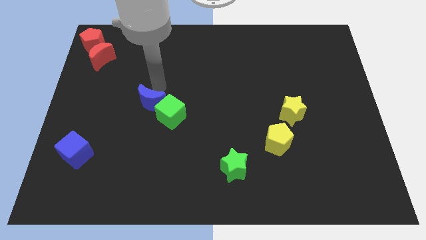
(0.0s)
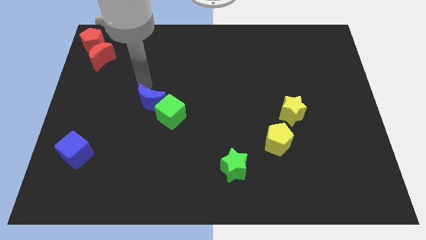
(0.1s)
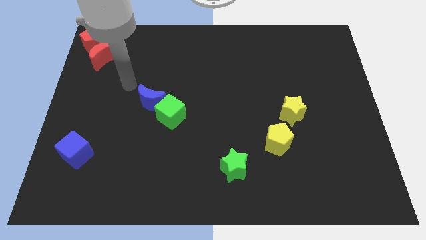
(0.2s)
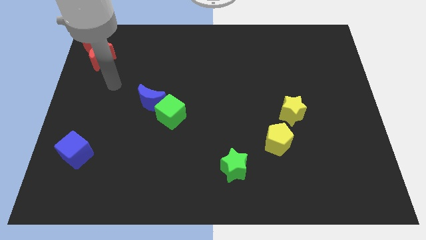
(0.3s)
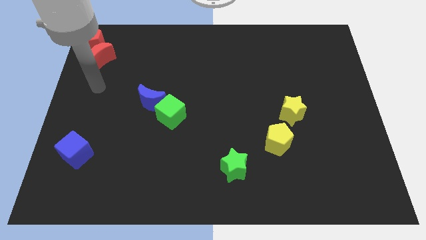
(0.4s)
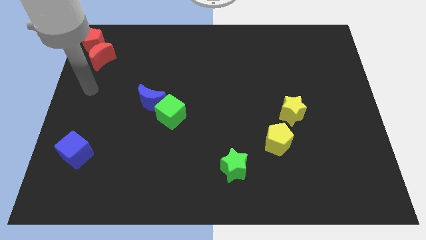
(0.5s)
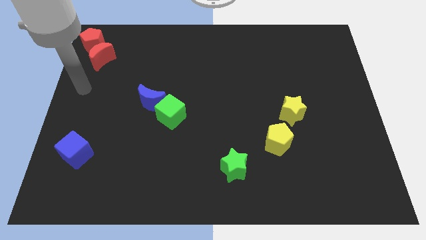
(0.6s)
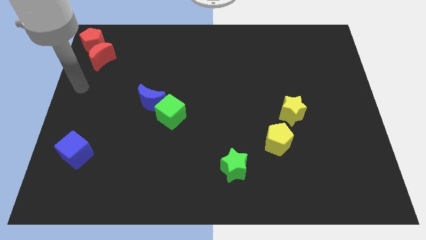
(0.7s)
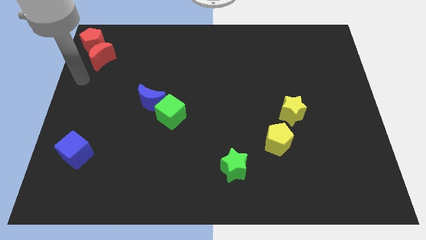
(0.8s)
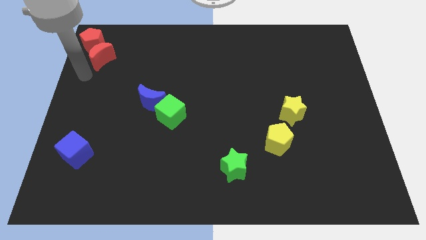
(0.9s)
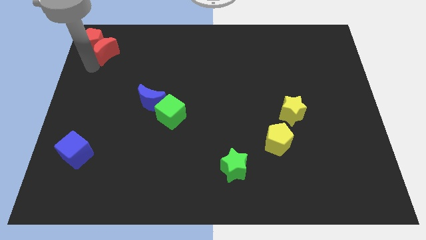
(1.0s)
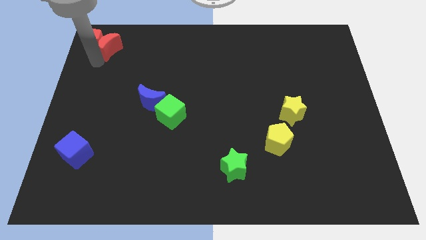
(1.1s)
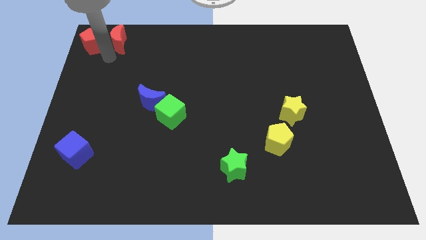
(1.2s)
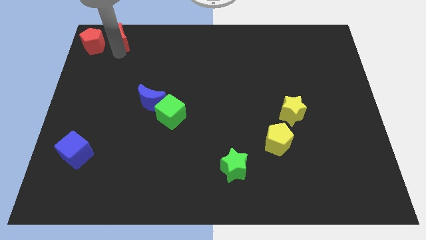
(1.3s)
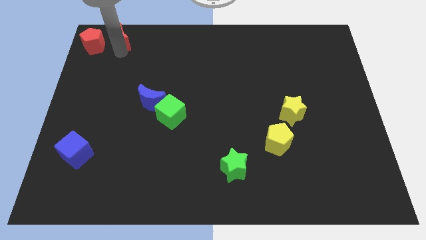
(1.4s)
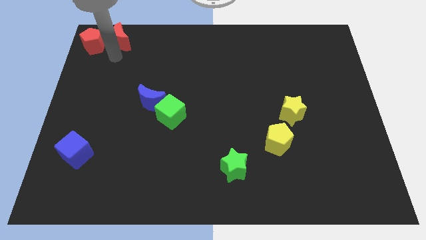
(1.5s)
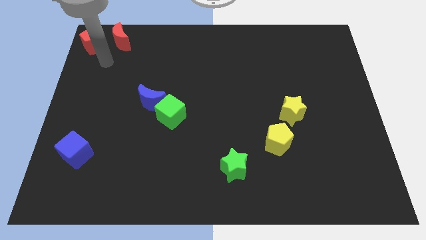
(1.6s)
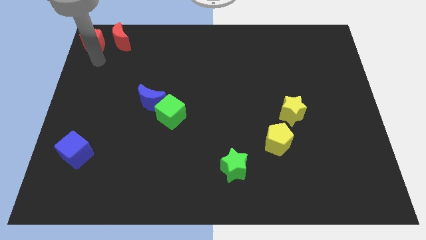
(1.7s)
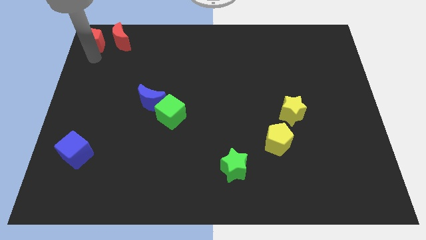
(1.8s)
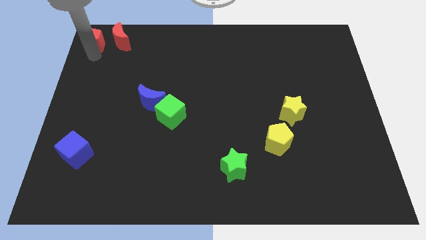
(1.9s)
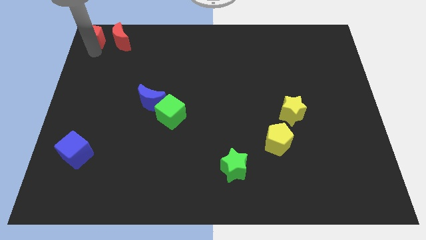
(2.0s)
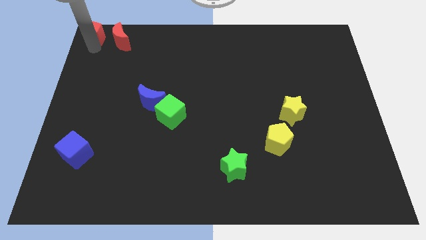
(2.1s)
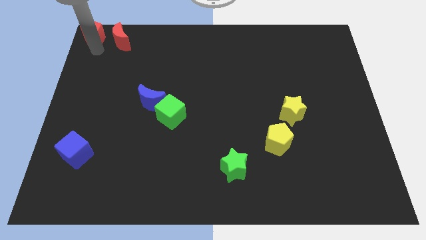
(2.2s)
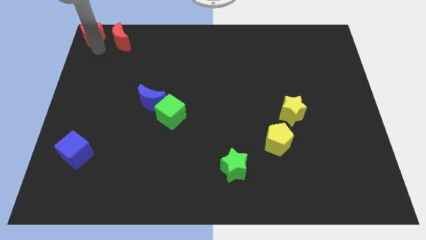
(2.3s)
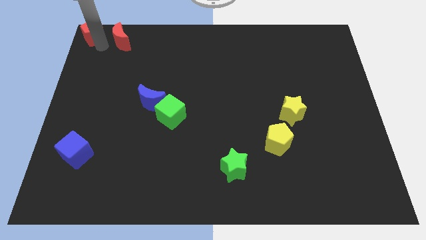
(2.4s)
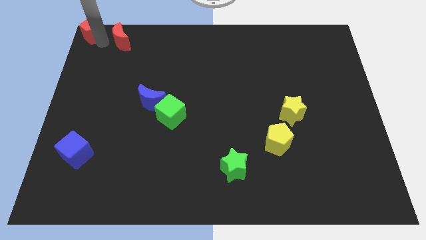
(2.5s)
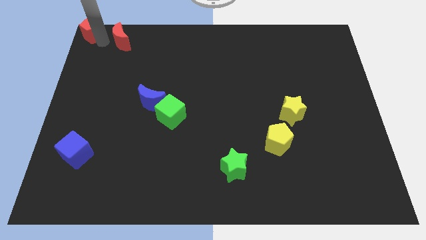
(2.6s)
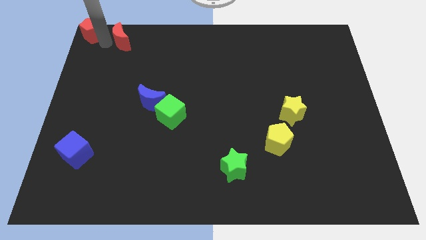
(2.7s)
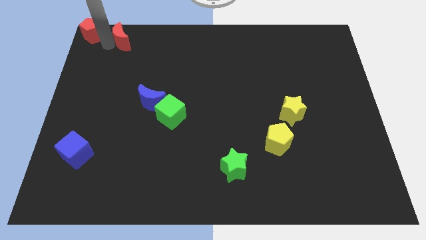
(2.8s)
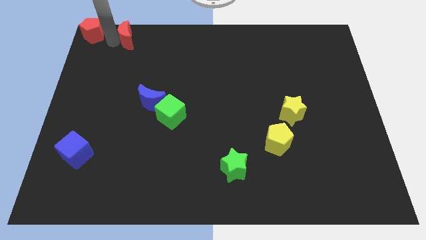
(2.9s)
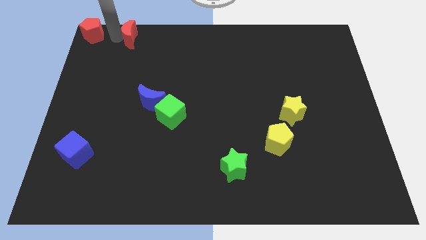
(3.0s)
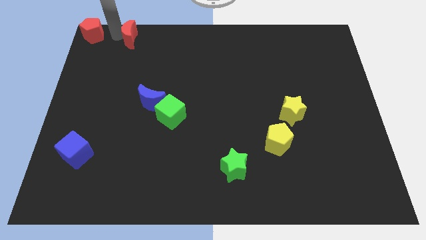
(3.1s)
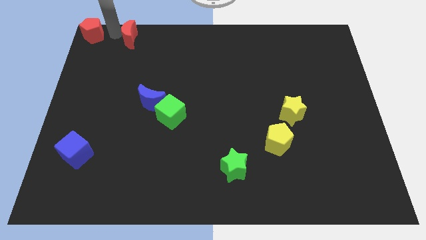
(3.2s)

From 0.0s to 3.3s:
move the red crescent to the right of the red pentagon

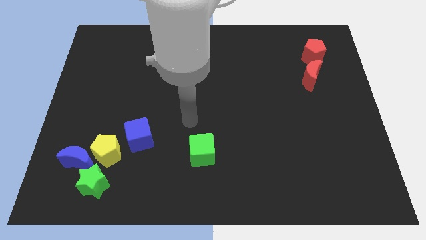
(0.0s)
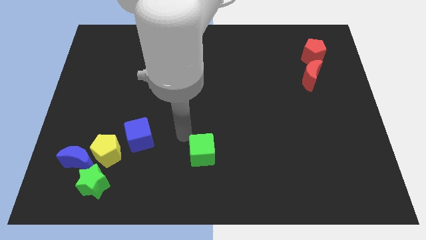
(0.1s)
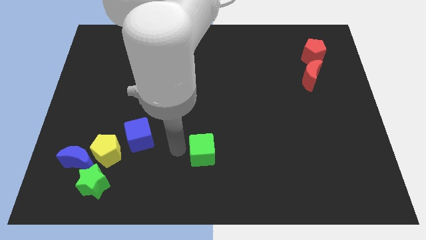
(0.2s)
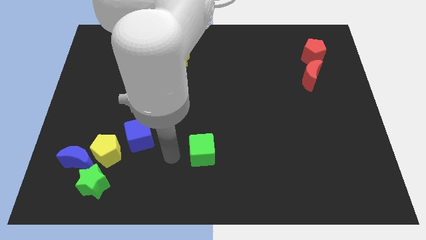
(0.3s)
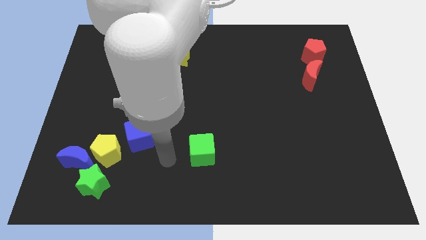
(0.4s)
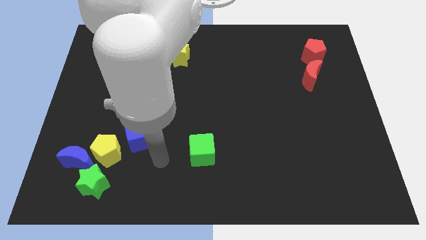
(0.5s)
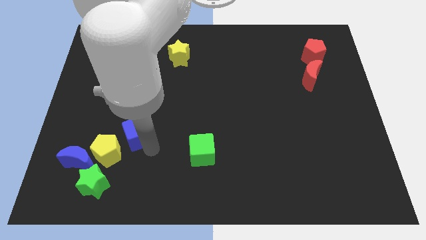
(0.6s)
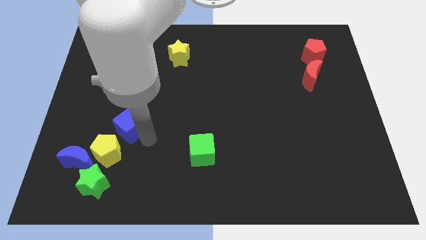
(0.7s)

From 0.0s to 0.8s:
touch the bottom of blue cube

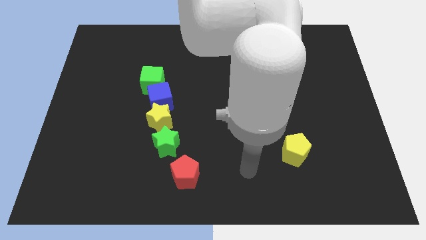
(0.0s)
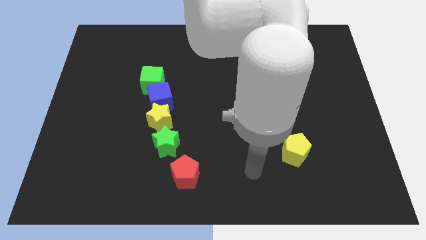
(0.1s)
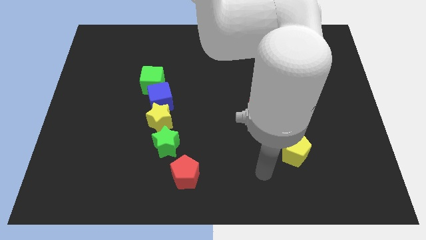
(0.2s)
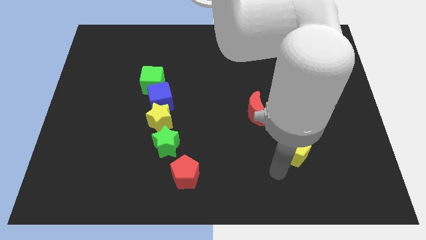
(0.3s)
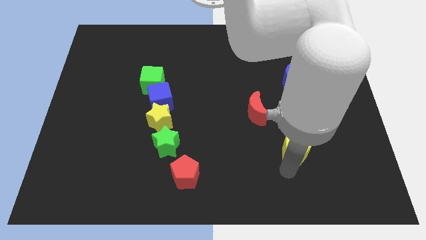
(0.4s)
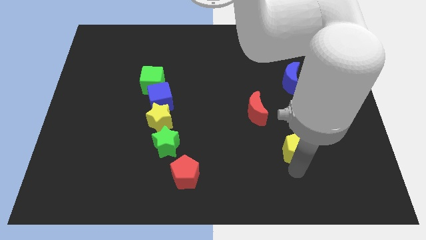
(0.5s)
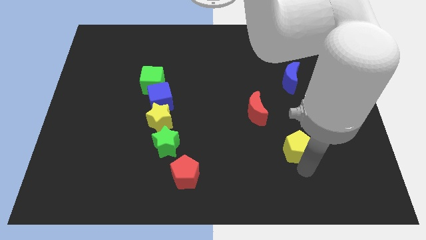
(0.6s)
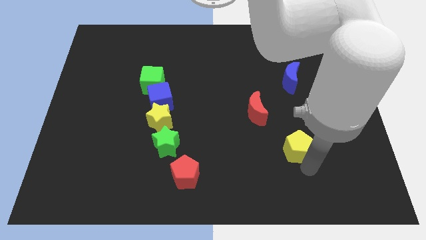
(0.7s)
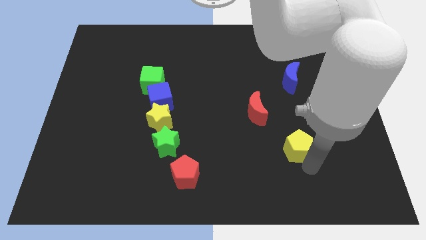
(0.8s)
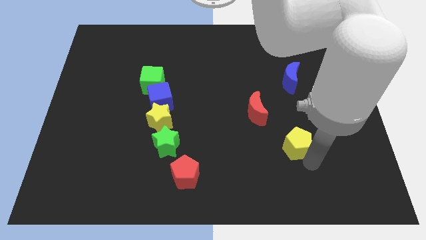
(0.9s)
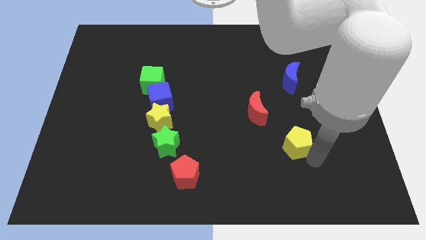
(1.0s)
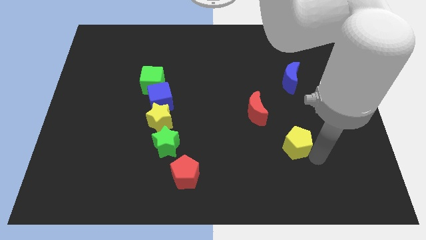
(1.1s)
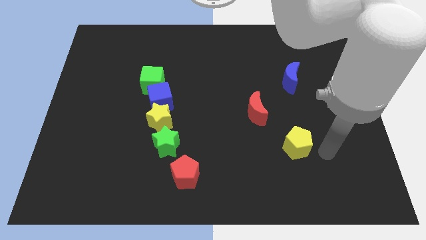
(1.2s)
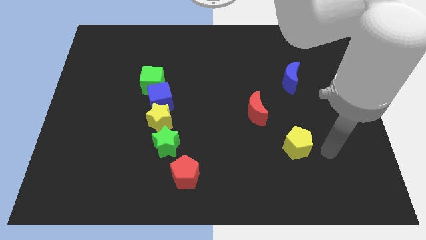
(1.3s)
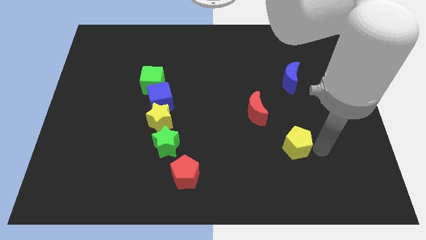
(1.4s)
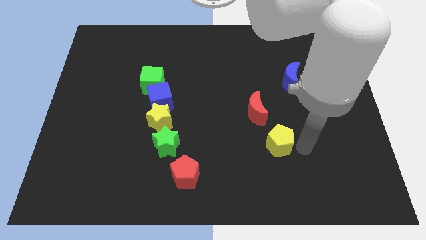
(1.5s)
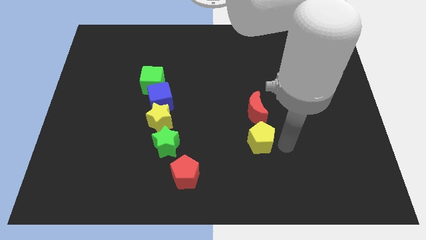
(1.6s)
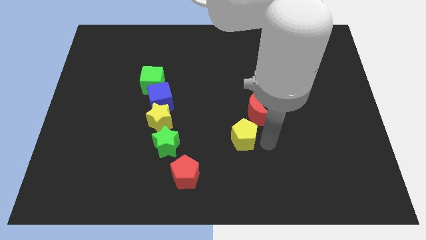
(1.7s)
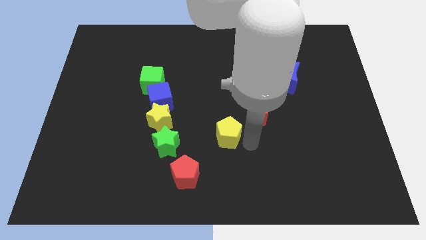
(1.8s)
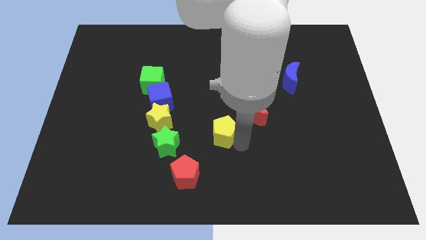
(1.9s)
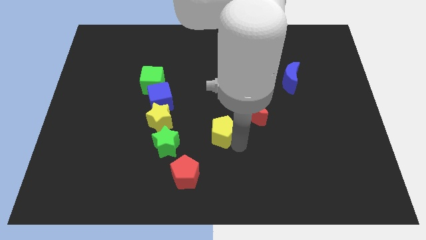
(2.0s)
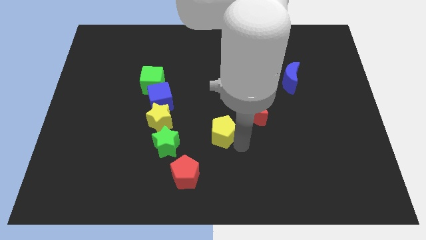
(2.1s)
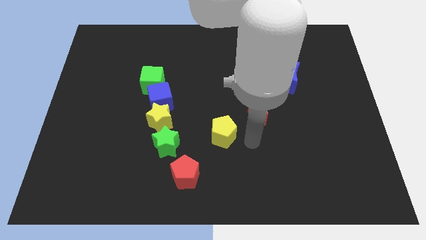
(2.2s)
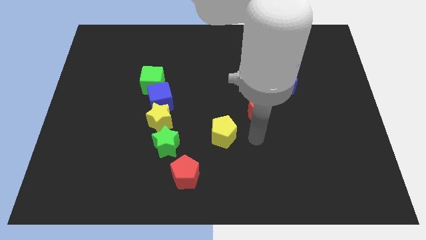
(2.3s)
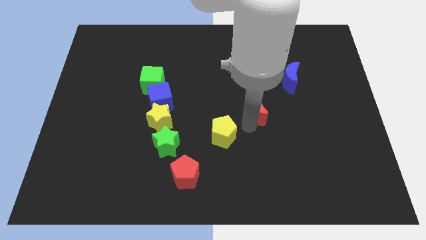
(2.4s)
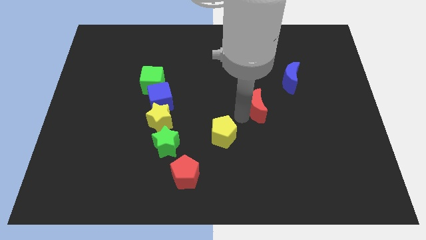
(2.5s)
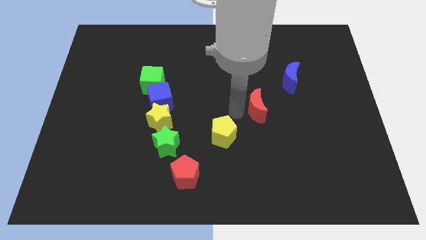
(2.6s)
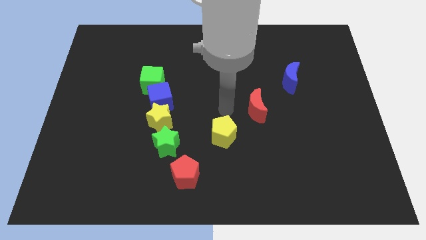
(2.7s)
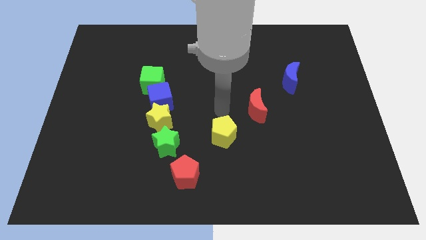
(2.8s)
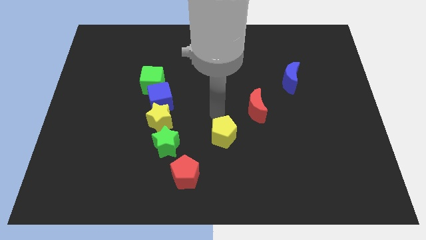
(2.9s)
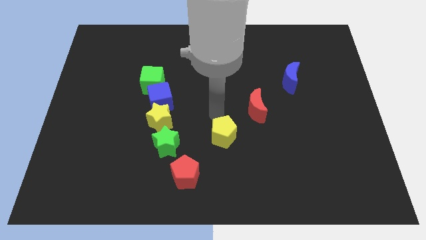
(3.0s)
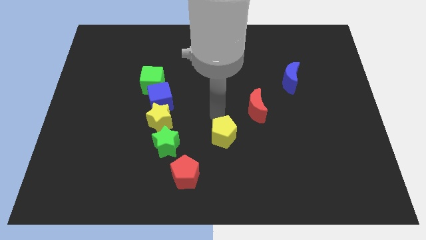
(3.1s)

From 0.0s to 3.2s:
place yellow pentagon to the right of green star

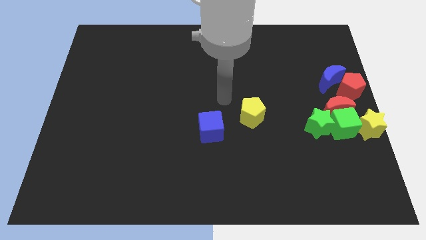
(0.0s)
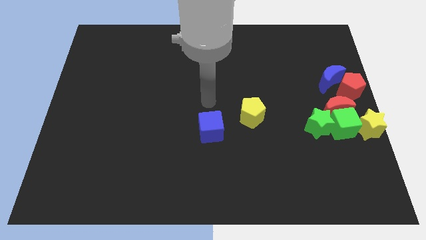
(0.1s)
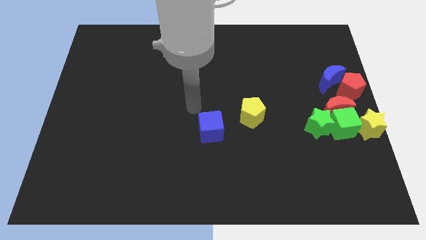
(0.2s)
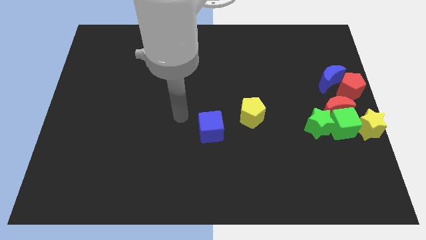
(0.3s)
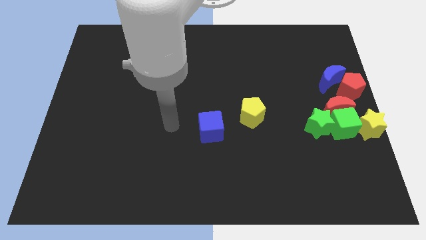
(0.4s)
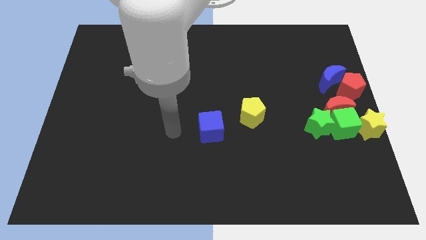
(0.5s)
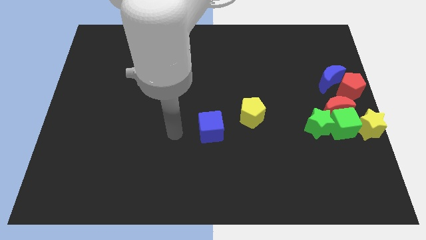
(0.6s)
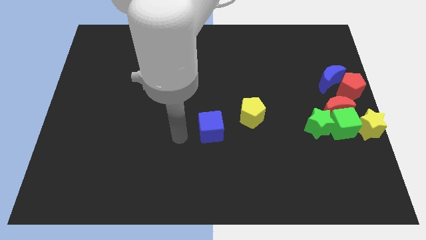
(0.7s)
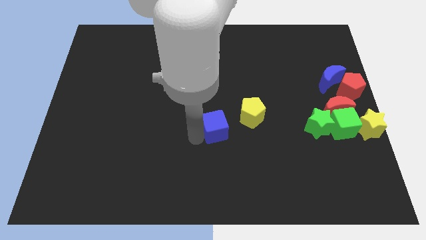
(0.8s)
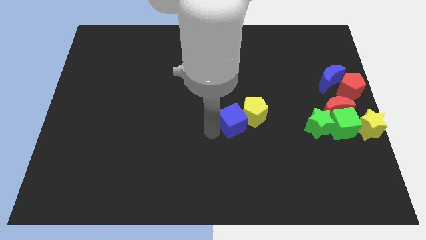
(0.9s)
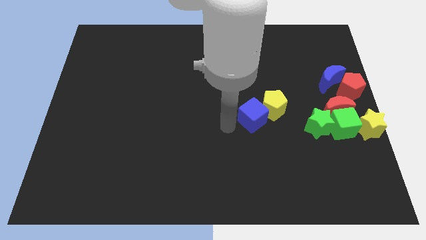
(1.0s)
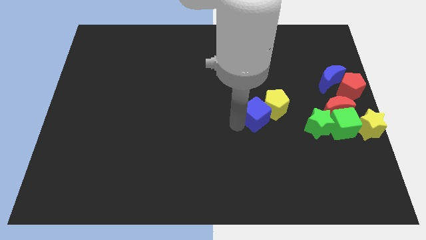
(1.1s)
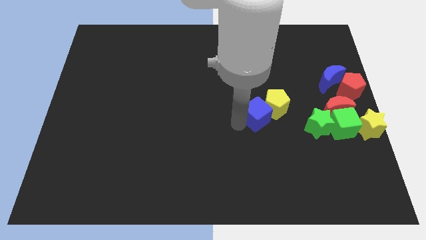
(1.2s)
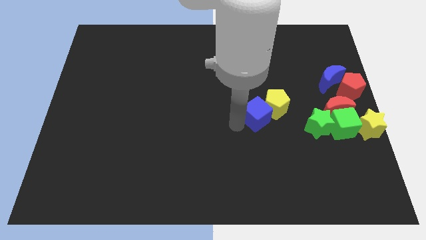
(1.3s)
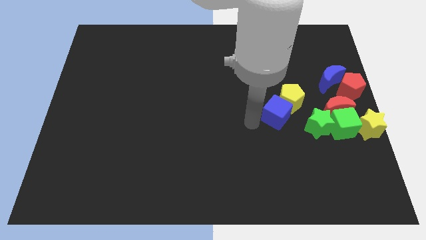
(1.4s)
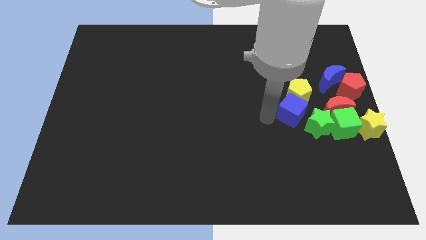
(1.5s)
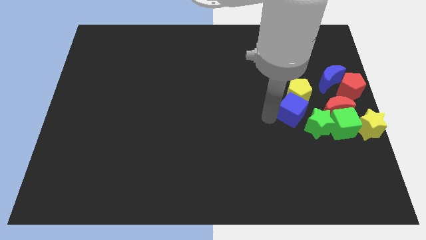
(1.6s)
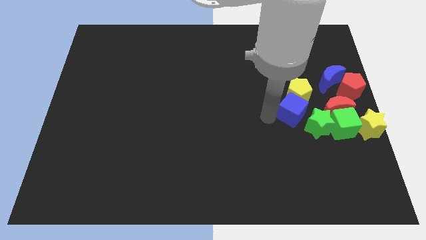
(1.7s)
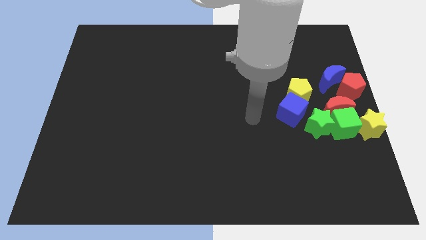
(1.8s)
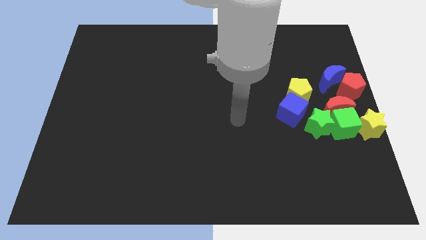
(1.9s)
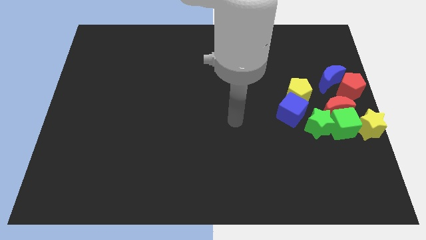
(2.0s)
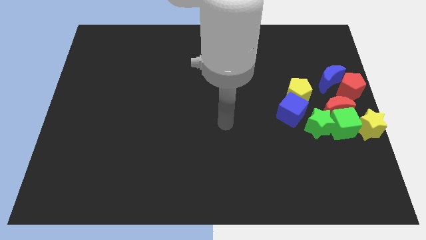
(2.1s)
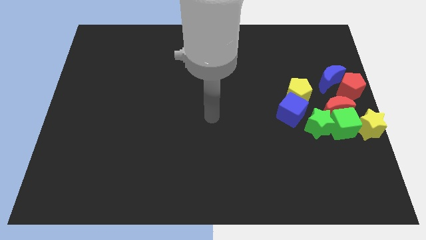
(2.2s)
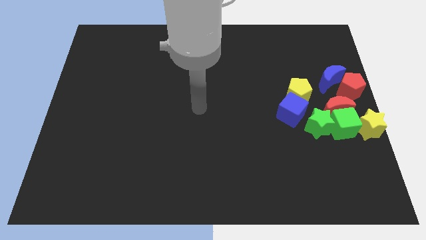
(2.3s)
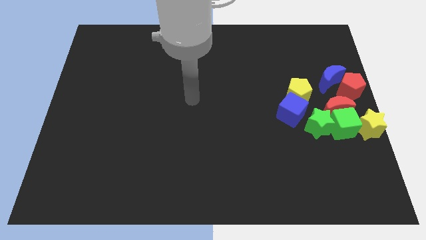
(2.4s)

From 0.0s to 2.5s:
move the blue cube along with the yellow pentagon into the group
